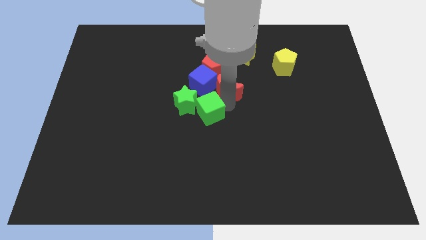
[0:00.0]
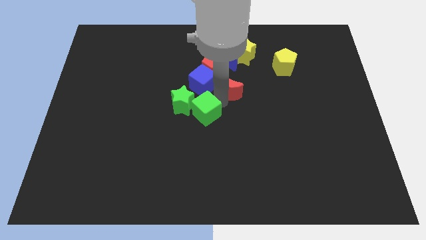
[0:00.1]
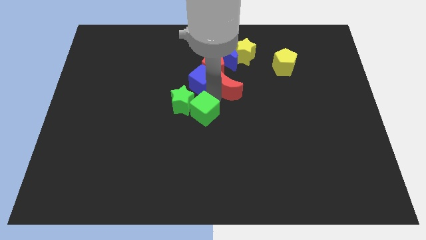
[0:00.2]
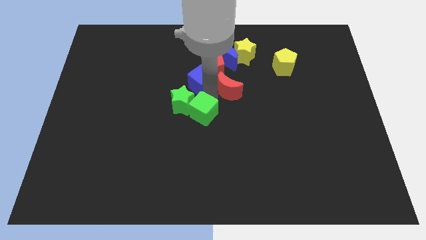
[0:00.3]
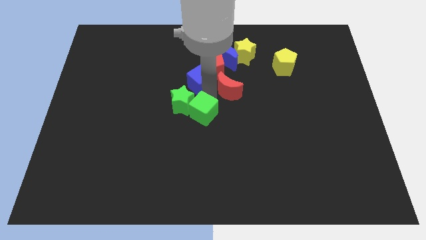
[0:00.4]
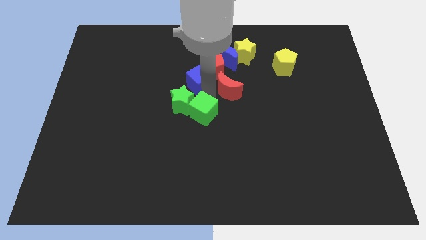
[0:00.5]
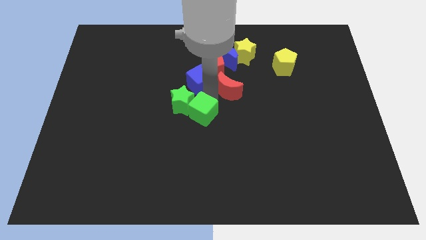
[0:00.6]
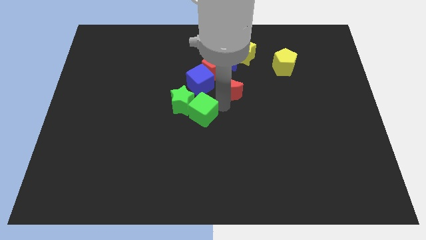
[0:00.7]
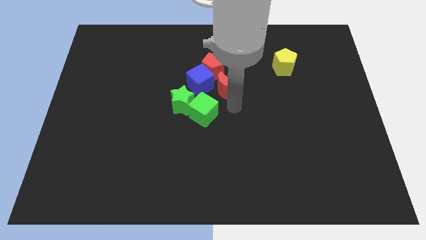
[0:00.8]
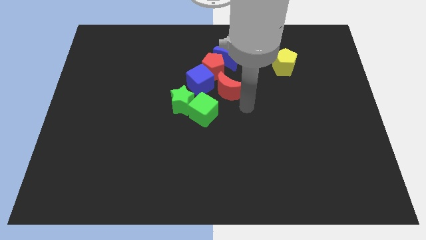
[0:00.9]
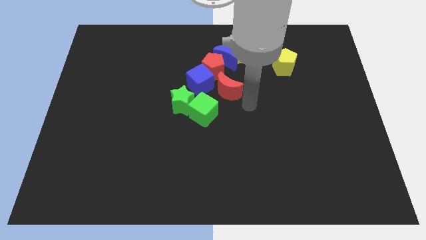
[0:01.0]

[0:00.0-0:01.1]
separate red crescent and green cube

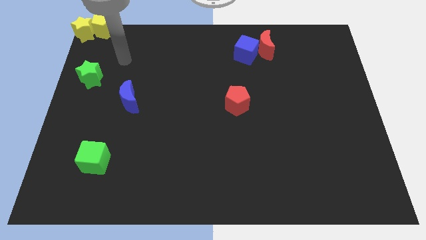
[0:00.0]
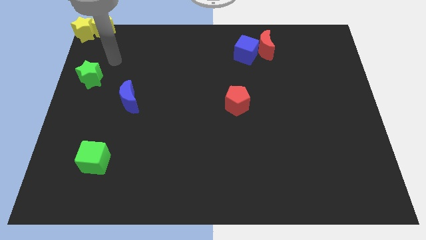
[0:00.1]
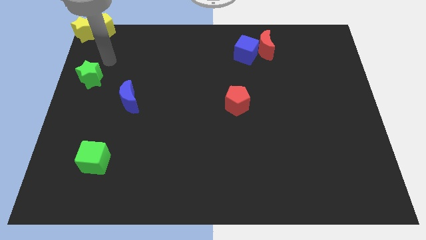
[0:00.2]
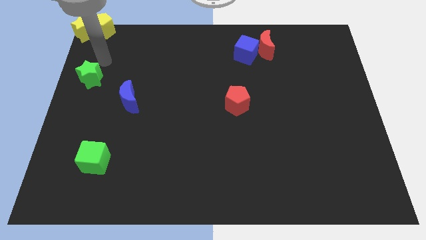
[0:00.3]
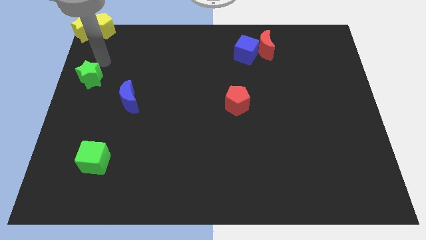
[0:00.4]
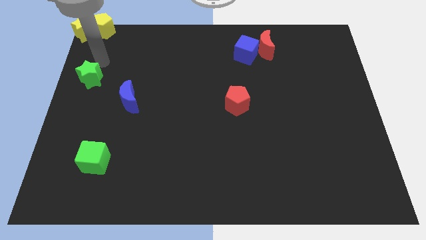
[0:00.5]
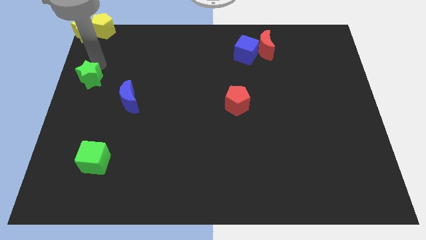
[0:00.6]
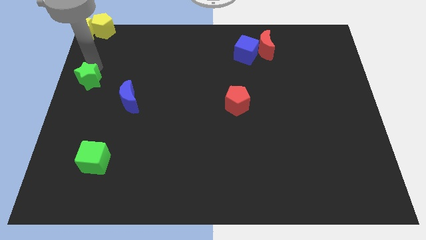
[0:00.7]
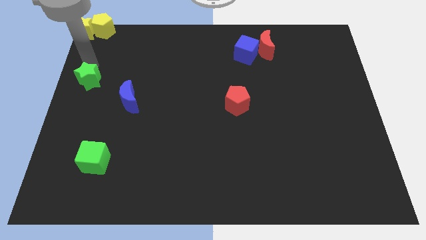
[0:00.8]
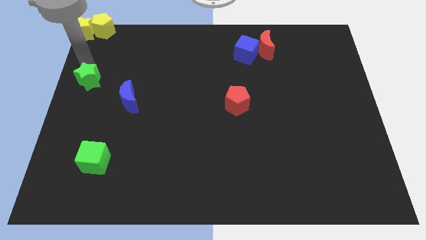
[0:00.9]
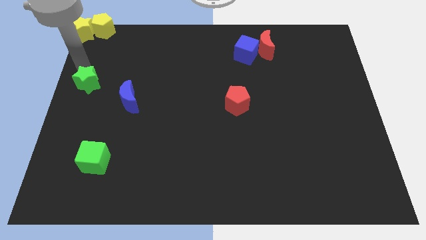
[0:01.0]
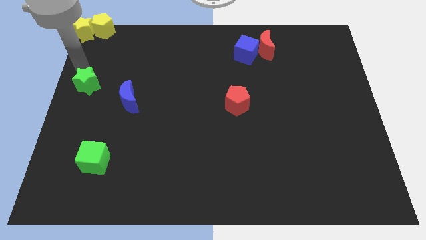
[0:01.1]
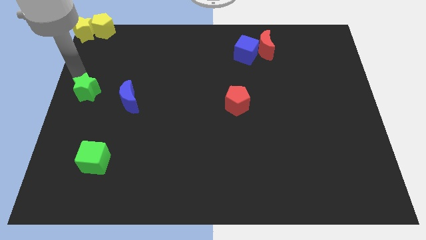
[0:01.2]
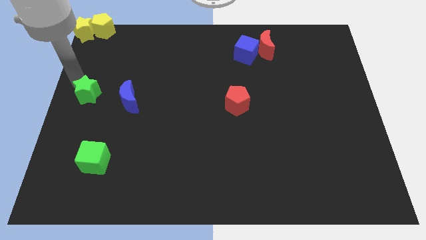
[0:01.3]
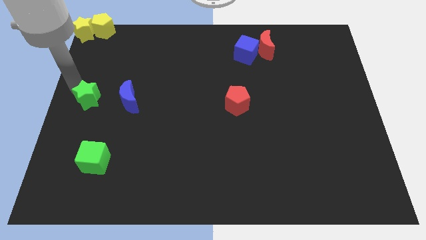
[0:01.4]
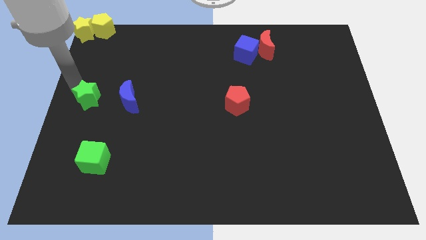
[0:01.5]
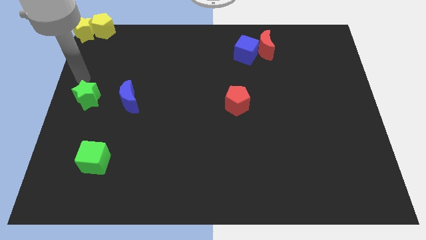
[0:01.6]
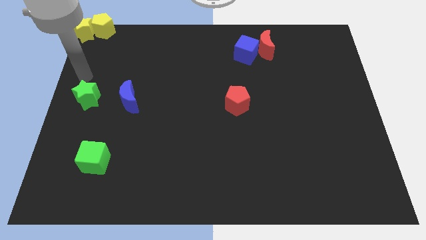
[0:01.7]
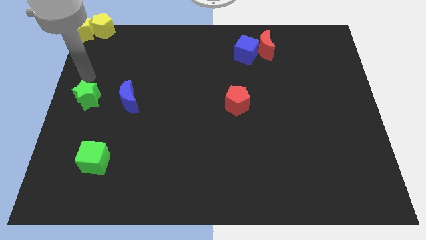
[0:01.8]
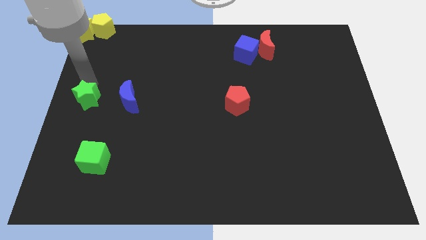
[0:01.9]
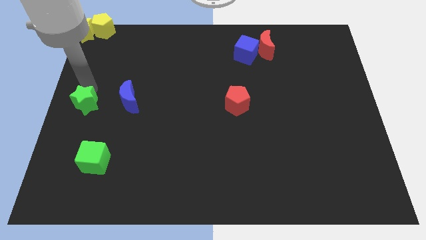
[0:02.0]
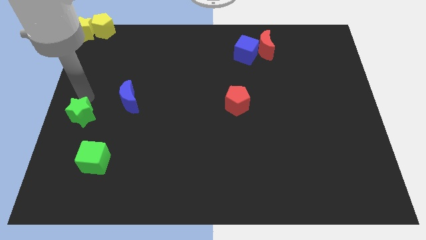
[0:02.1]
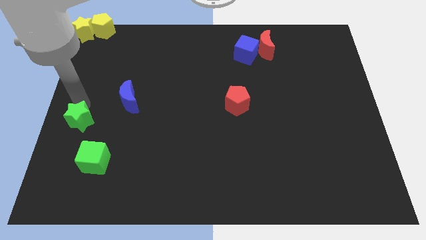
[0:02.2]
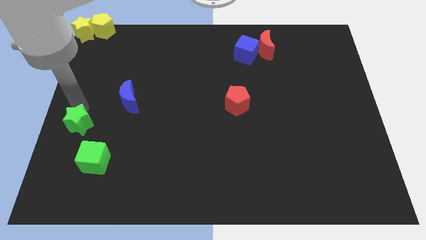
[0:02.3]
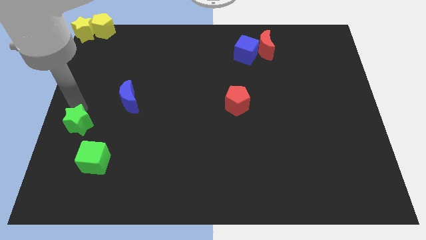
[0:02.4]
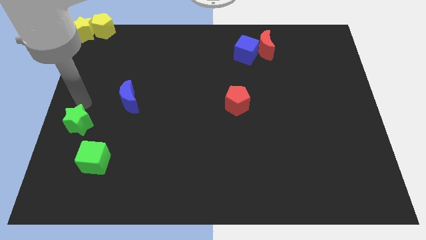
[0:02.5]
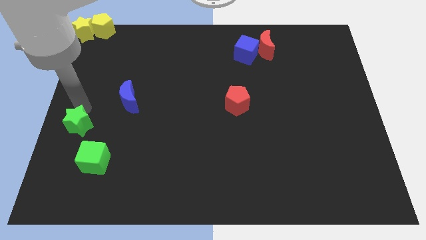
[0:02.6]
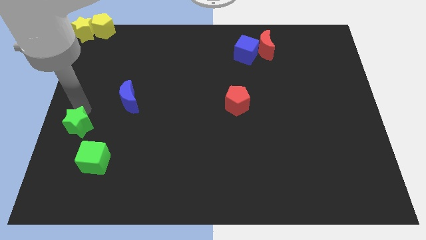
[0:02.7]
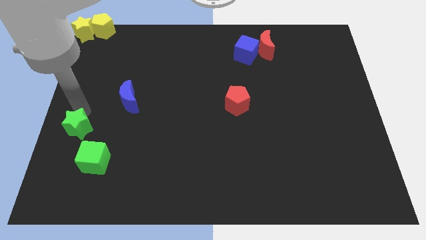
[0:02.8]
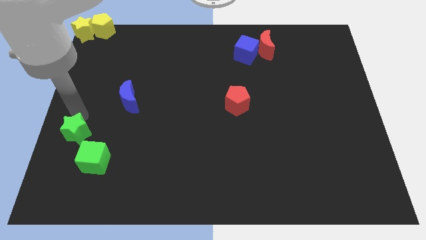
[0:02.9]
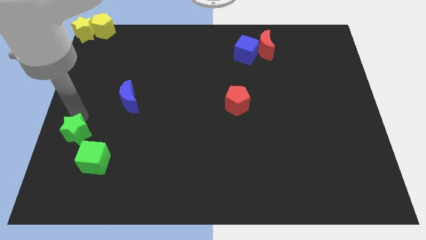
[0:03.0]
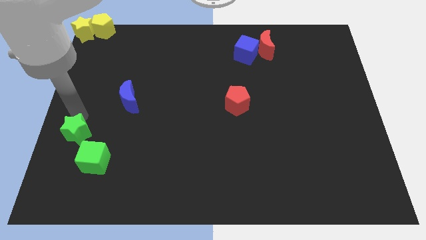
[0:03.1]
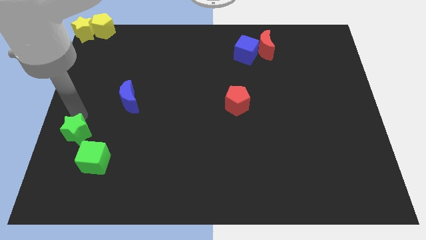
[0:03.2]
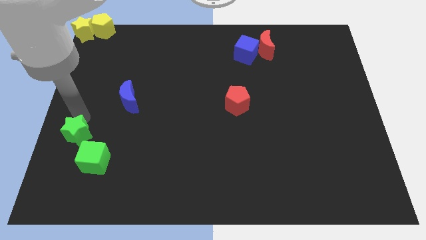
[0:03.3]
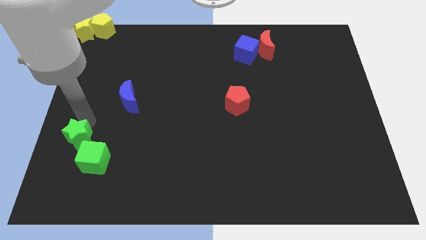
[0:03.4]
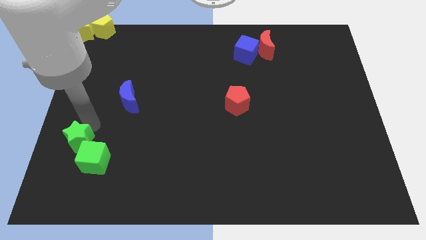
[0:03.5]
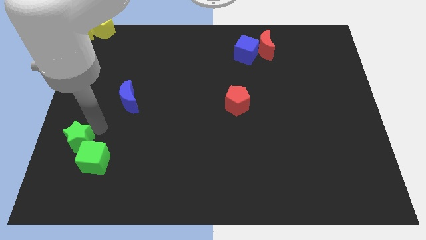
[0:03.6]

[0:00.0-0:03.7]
move the green star on the top left of the green cube

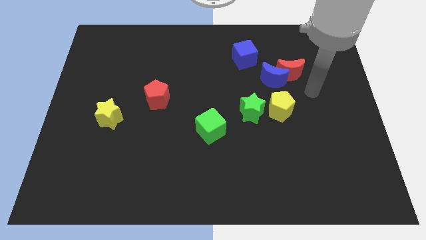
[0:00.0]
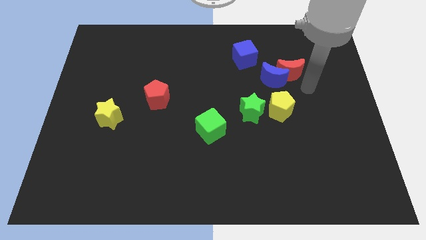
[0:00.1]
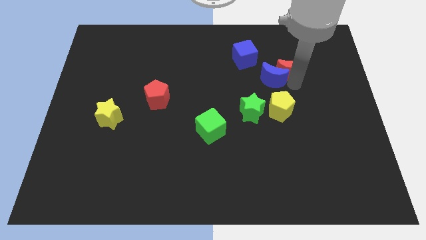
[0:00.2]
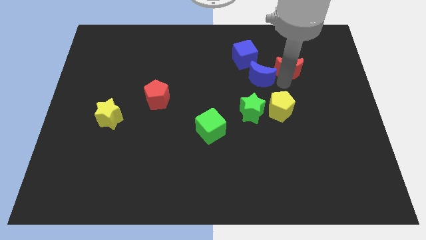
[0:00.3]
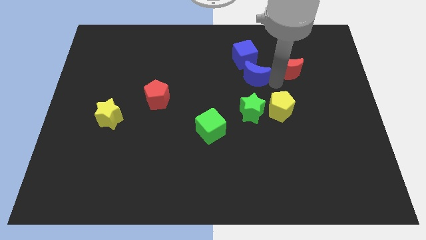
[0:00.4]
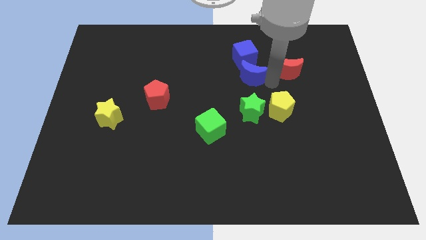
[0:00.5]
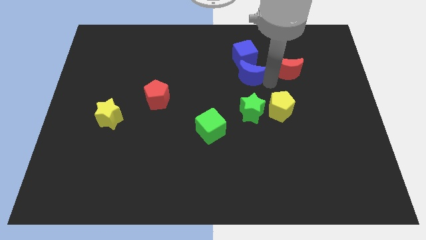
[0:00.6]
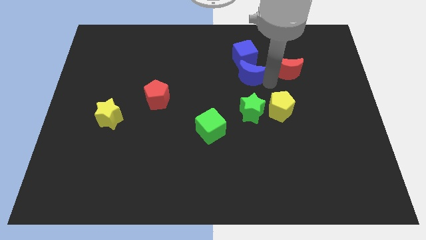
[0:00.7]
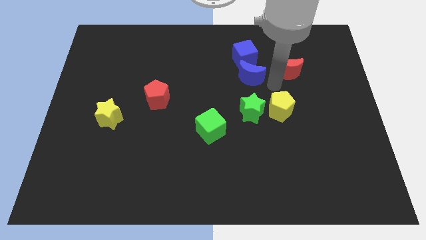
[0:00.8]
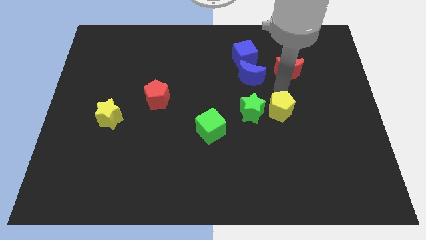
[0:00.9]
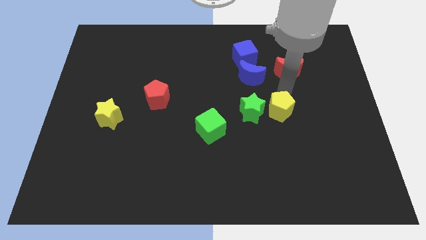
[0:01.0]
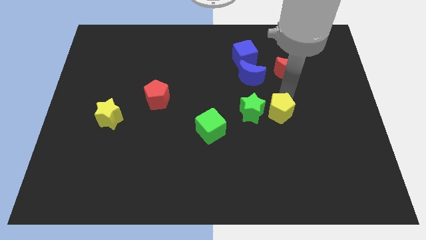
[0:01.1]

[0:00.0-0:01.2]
separate the blue moon from red moon

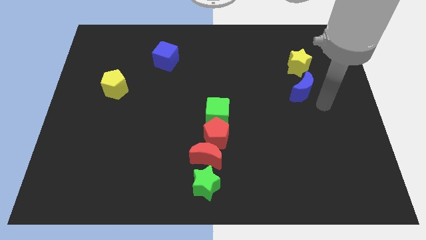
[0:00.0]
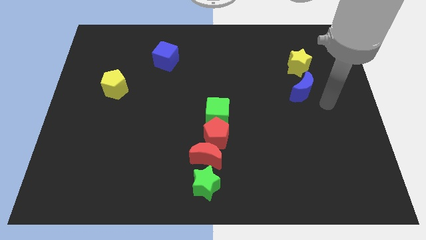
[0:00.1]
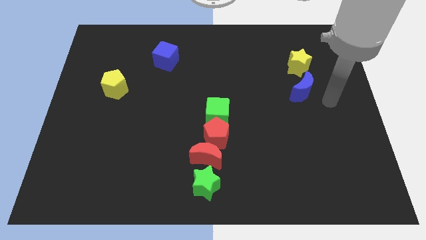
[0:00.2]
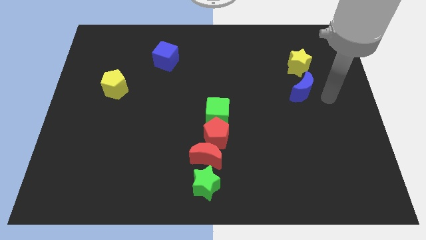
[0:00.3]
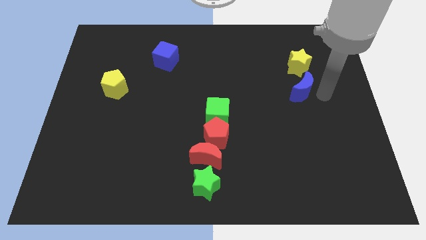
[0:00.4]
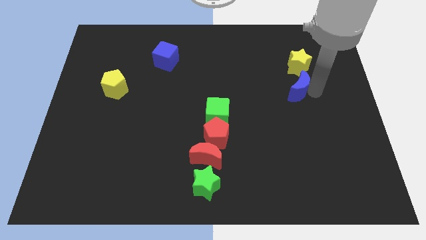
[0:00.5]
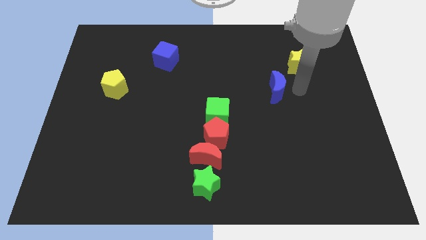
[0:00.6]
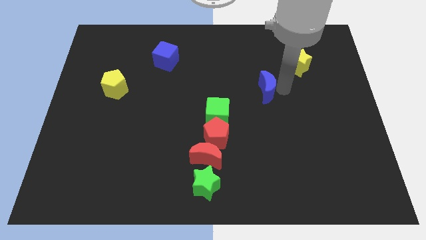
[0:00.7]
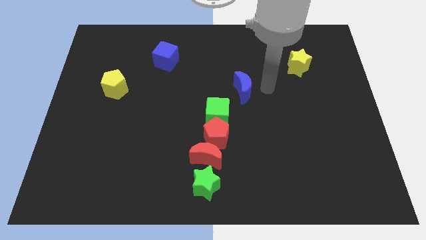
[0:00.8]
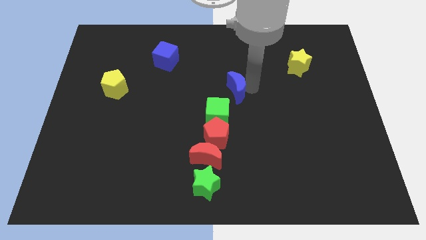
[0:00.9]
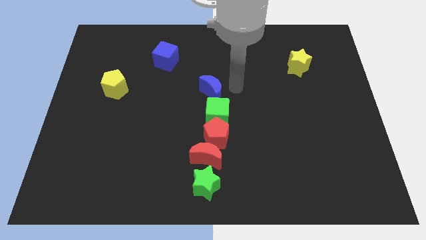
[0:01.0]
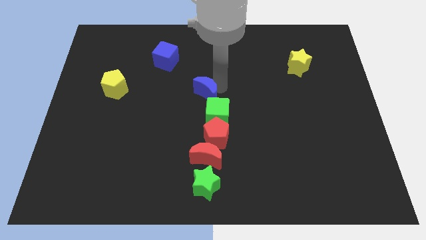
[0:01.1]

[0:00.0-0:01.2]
move blue moon to the top of green cube

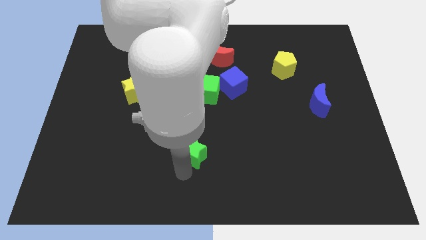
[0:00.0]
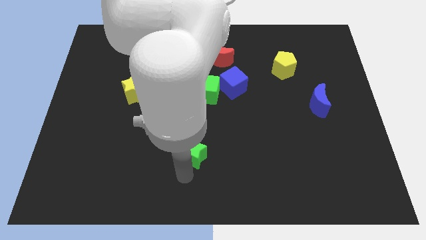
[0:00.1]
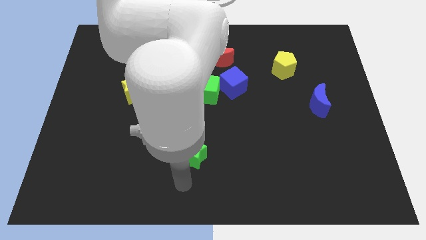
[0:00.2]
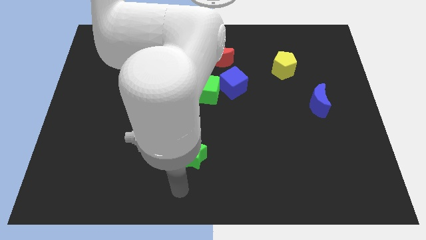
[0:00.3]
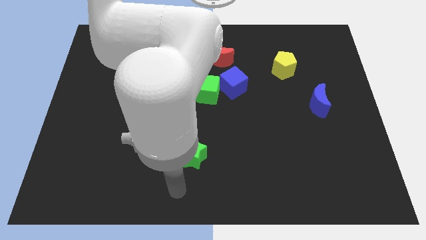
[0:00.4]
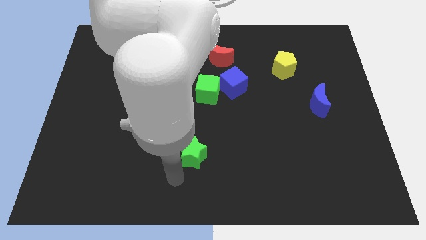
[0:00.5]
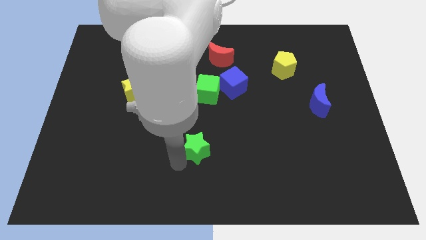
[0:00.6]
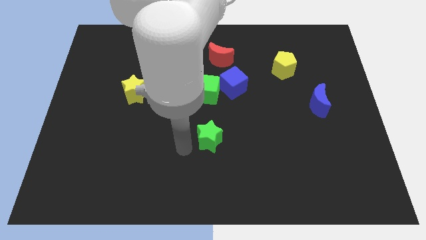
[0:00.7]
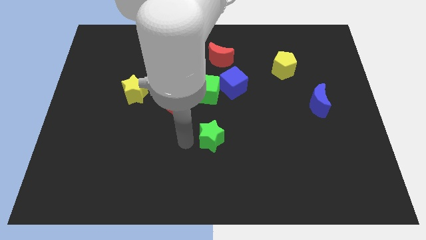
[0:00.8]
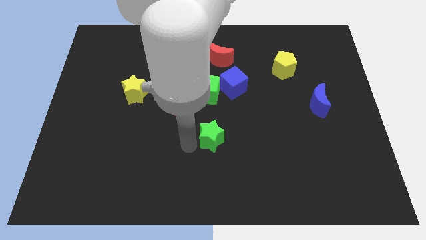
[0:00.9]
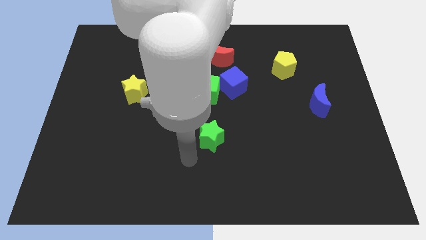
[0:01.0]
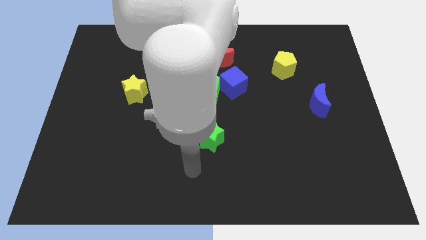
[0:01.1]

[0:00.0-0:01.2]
move the green star below to the green cube

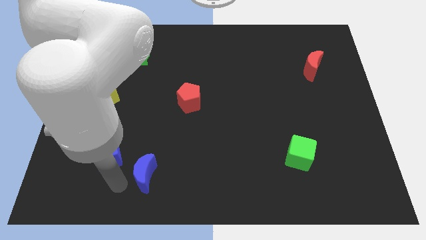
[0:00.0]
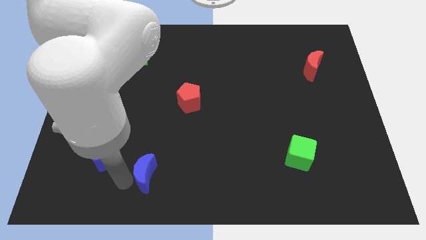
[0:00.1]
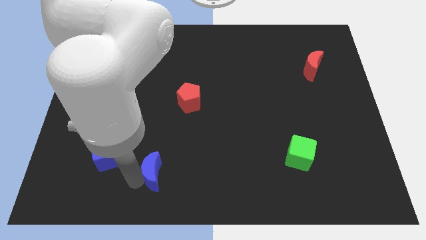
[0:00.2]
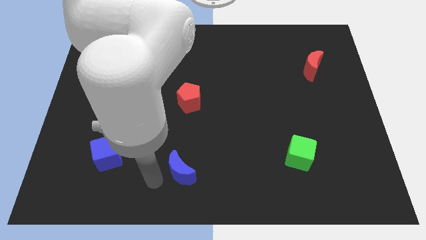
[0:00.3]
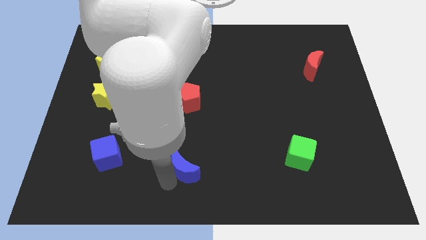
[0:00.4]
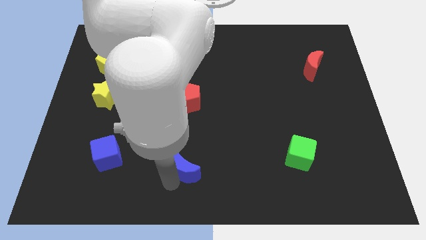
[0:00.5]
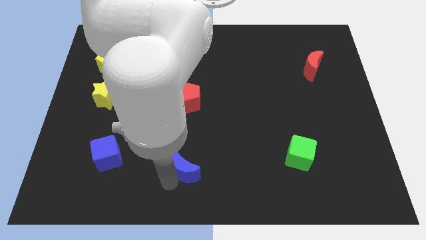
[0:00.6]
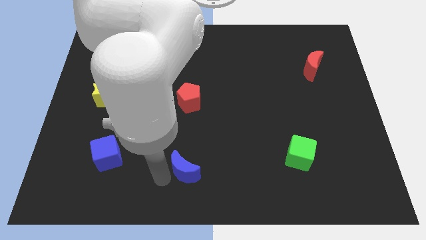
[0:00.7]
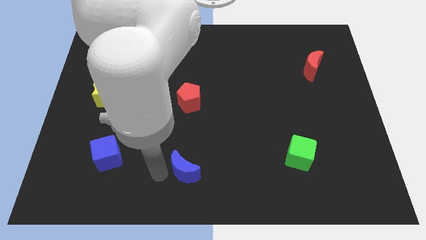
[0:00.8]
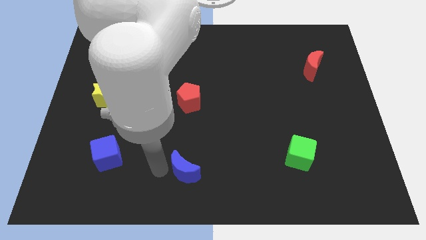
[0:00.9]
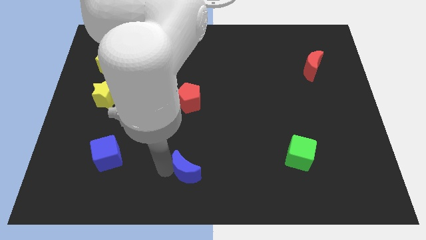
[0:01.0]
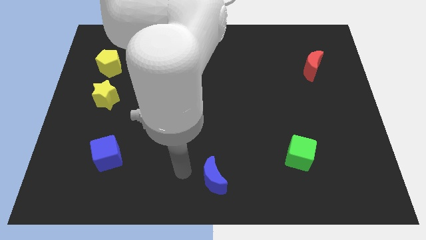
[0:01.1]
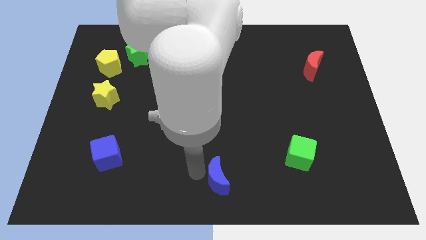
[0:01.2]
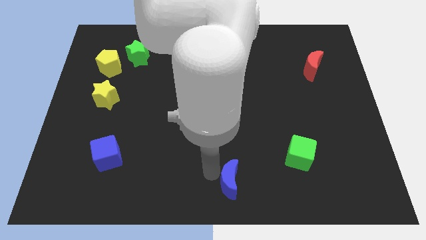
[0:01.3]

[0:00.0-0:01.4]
push the blue moon to the bottom center
